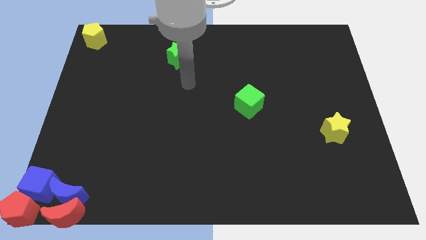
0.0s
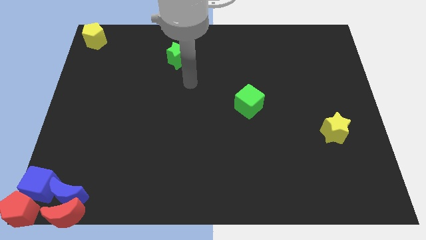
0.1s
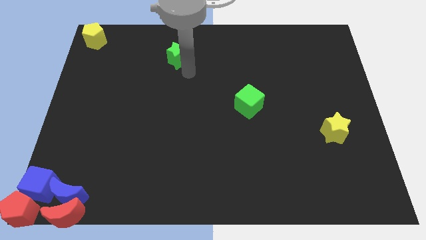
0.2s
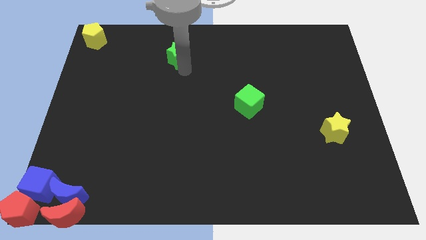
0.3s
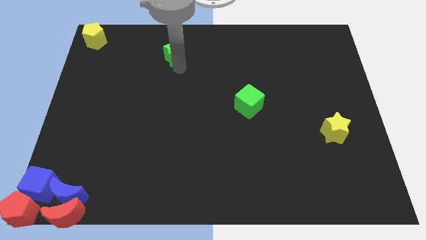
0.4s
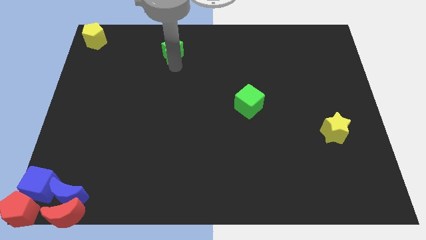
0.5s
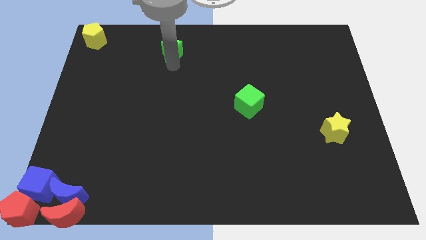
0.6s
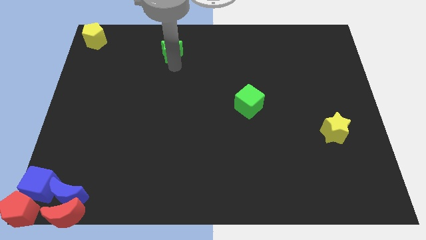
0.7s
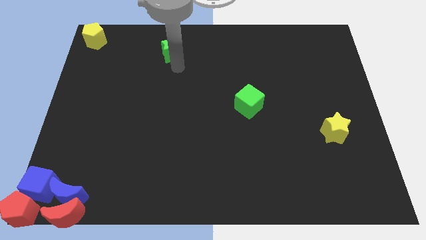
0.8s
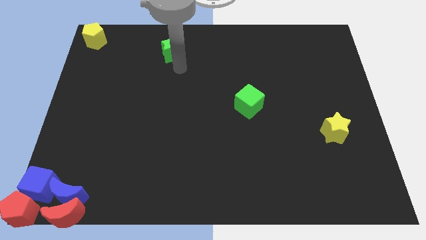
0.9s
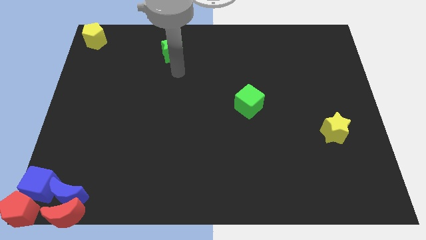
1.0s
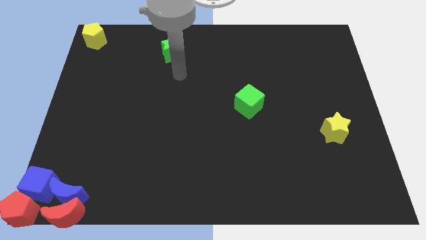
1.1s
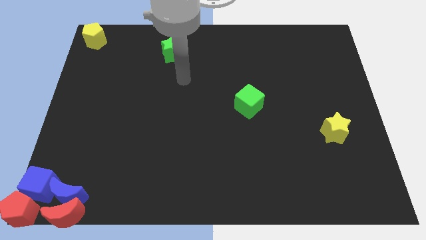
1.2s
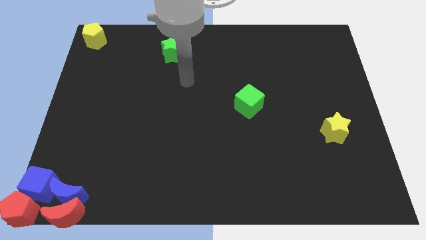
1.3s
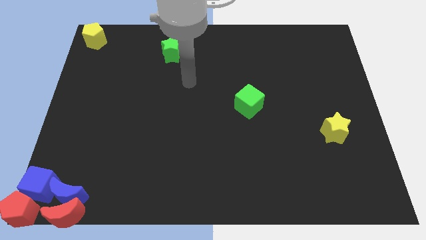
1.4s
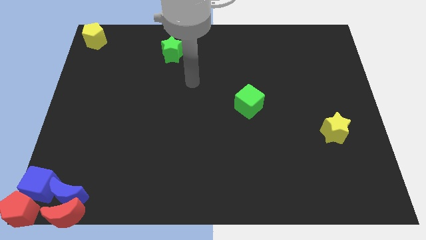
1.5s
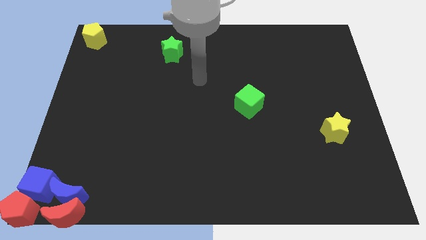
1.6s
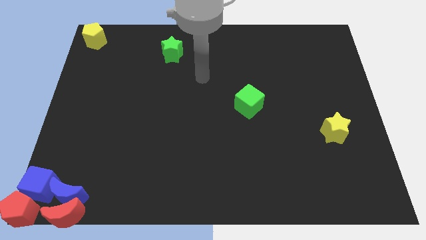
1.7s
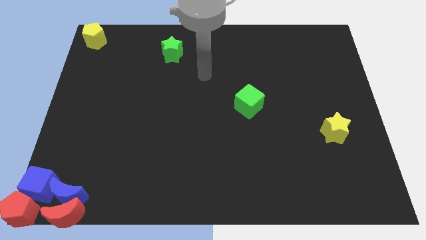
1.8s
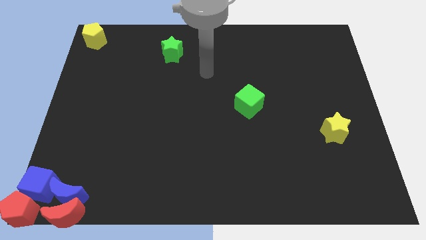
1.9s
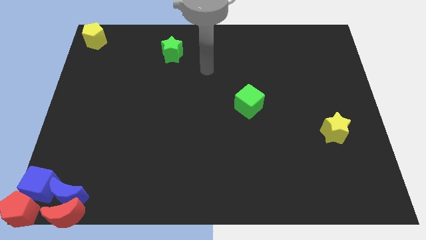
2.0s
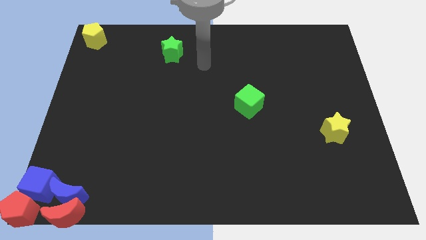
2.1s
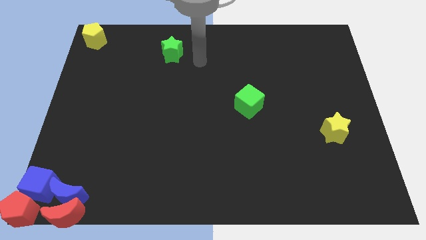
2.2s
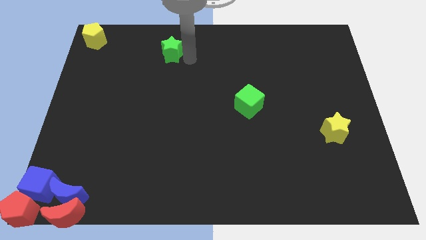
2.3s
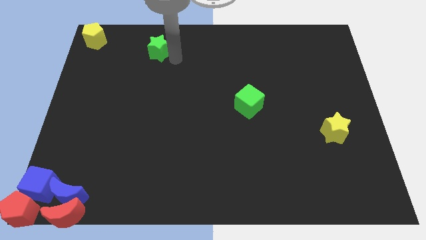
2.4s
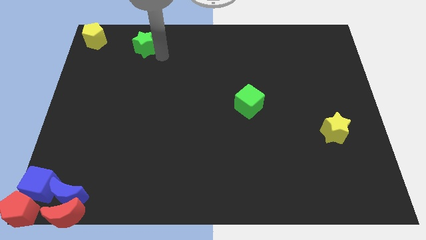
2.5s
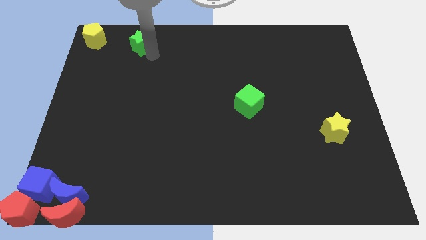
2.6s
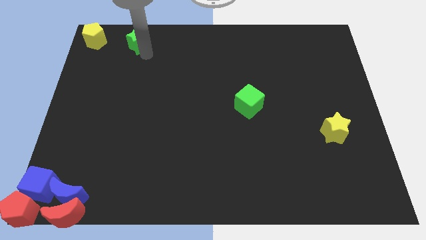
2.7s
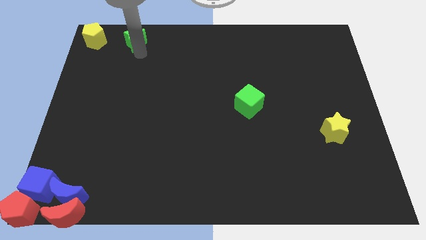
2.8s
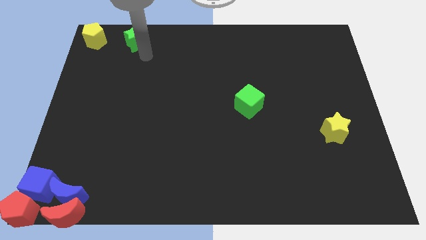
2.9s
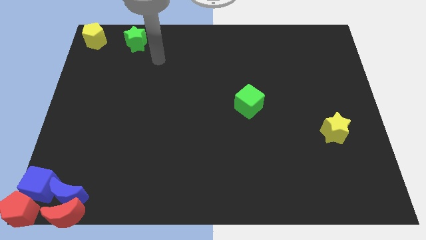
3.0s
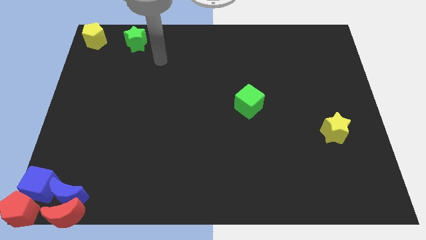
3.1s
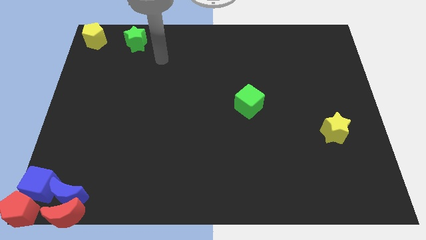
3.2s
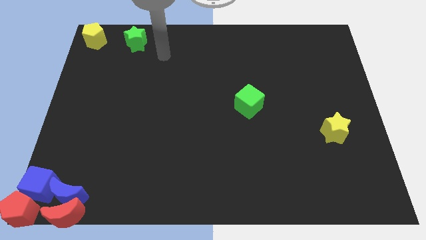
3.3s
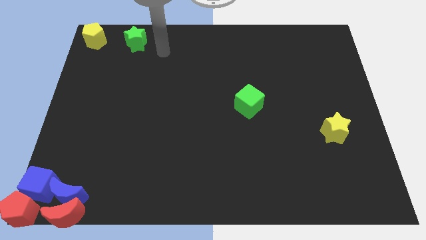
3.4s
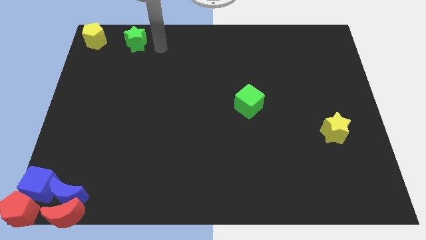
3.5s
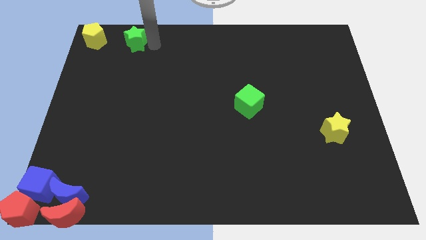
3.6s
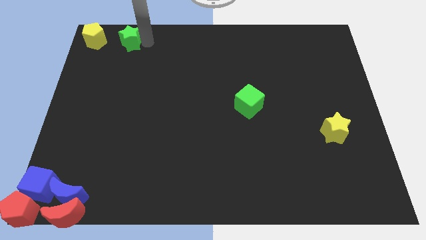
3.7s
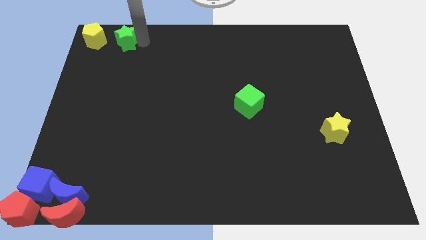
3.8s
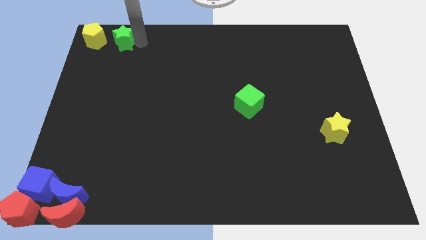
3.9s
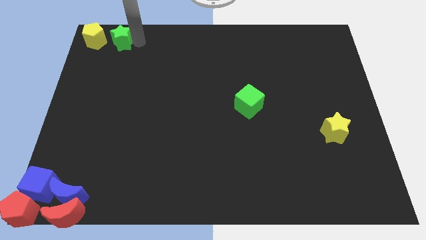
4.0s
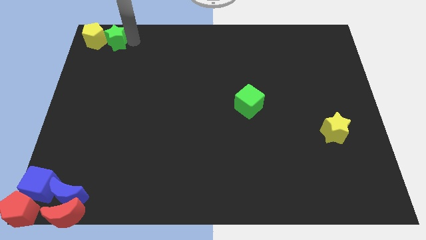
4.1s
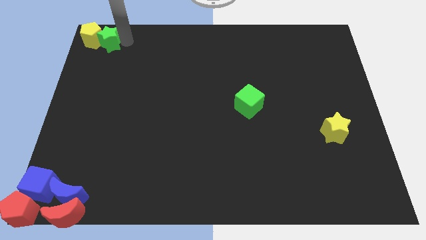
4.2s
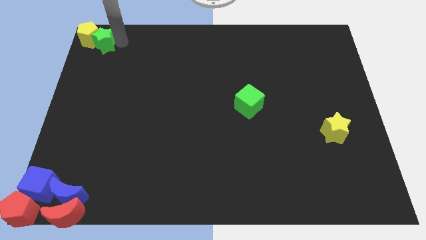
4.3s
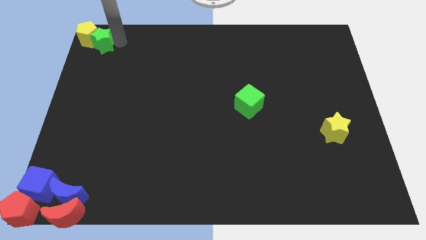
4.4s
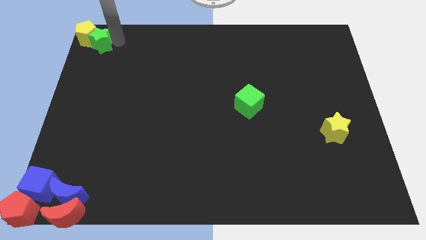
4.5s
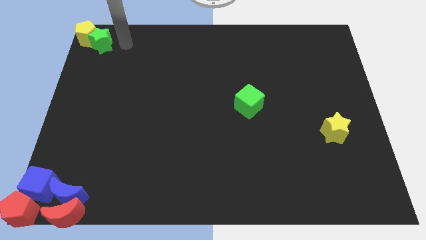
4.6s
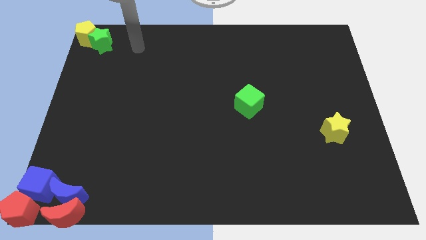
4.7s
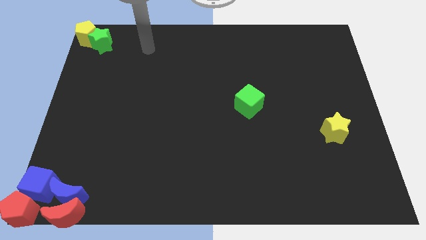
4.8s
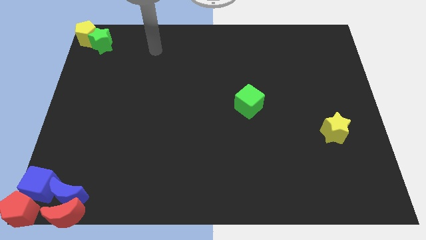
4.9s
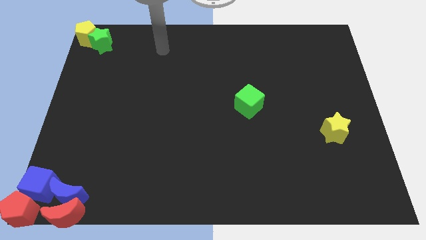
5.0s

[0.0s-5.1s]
push the green star into the yellow pentagon

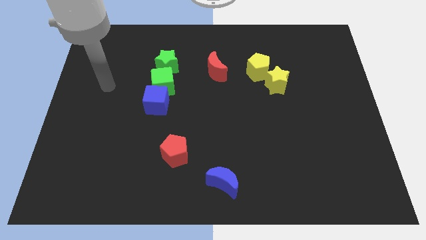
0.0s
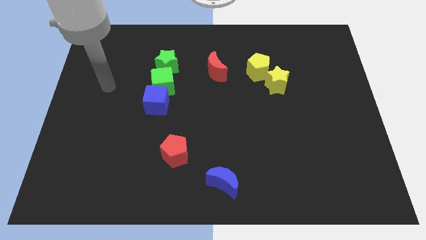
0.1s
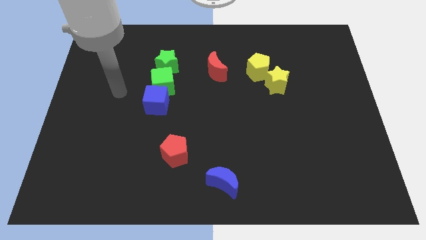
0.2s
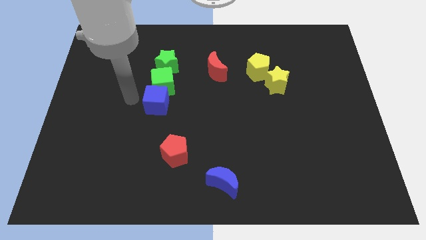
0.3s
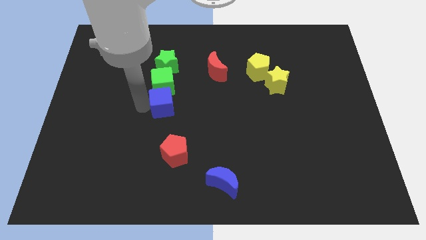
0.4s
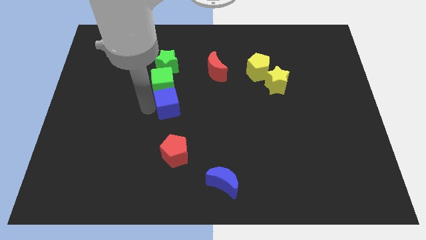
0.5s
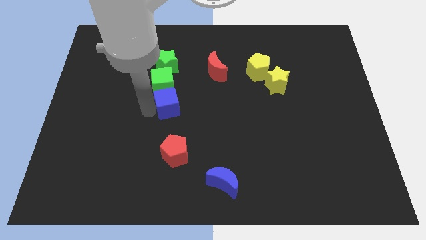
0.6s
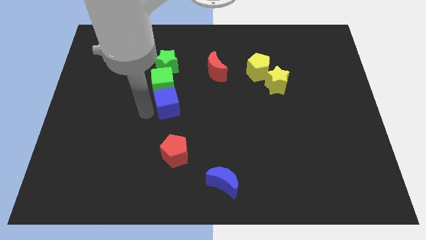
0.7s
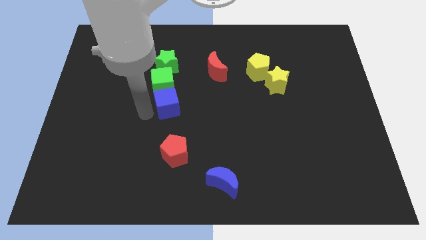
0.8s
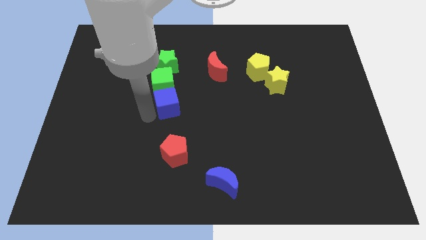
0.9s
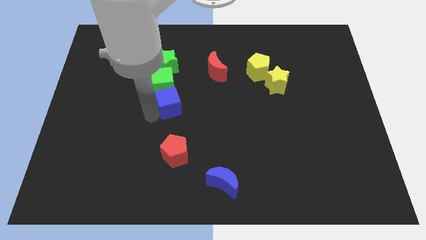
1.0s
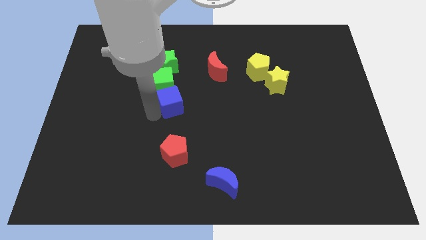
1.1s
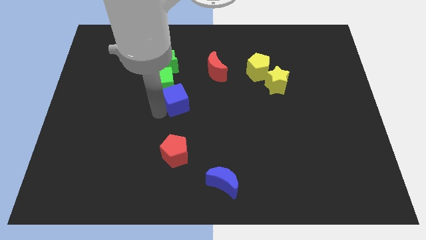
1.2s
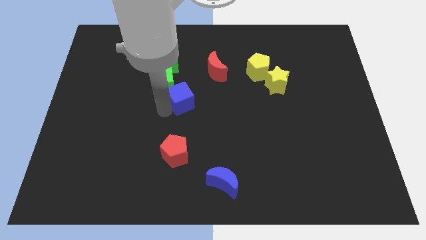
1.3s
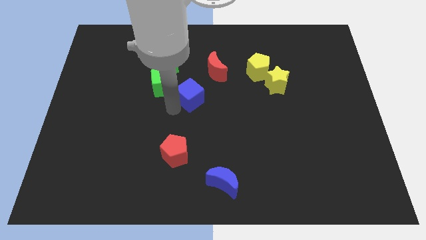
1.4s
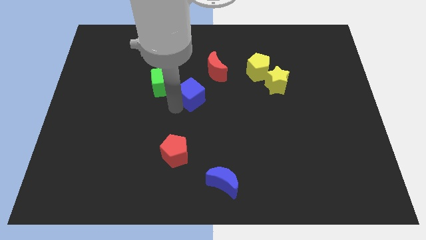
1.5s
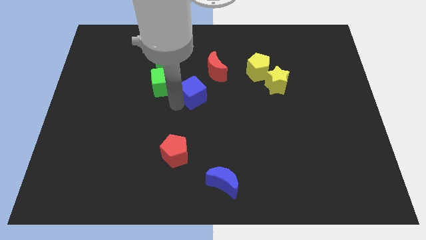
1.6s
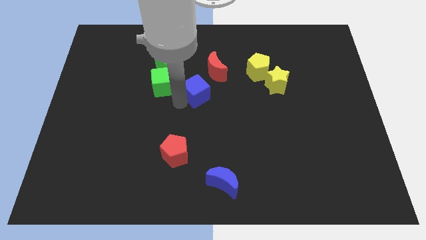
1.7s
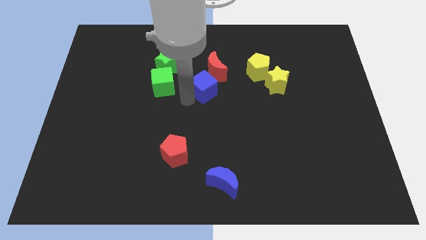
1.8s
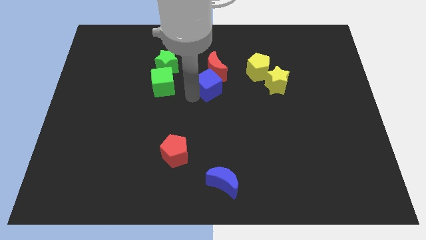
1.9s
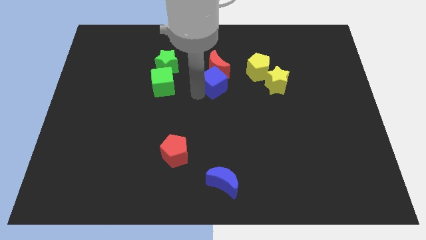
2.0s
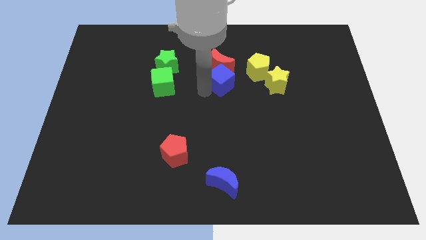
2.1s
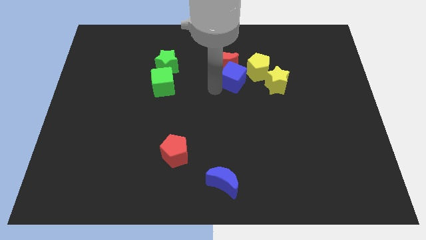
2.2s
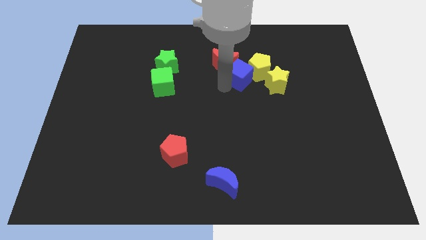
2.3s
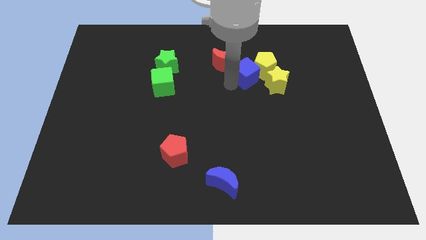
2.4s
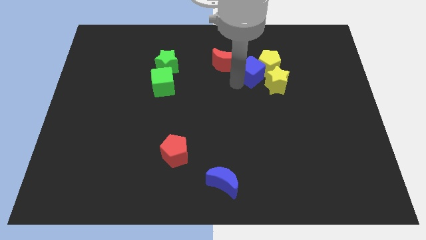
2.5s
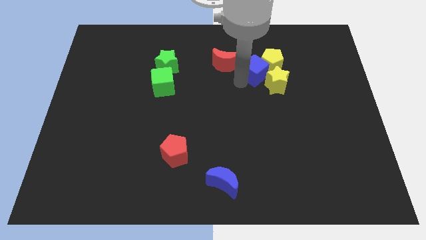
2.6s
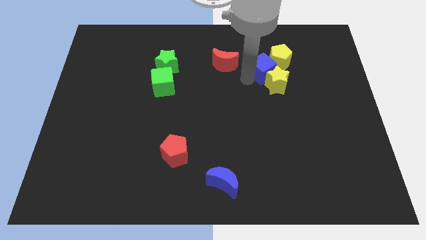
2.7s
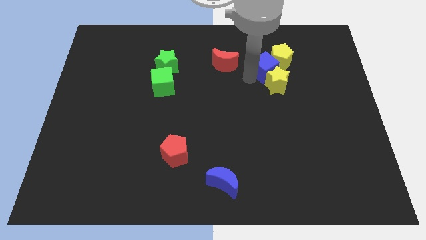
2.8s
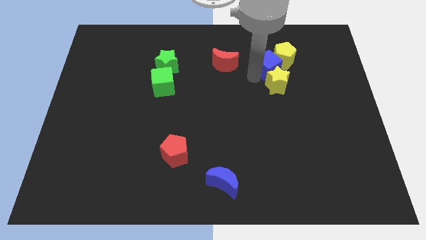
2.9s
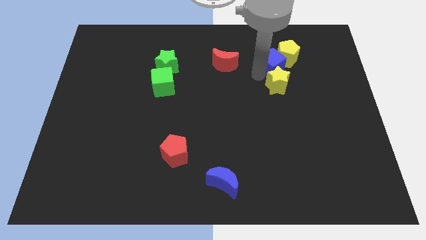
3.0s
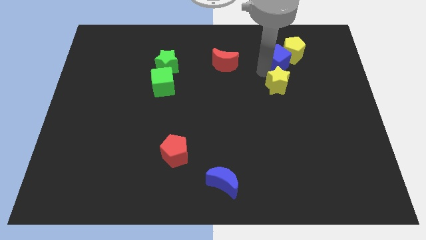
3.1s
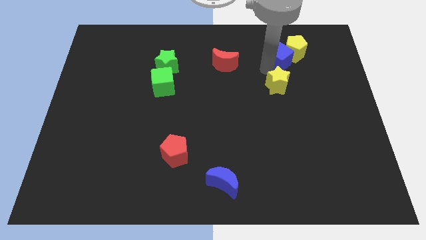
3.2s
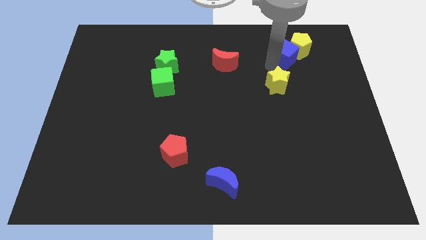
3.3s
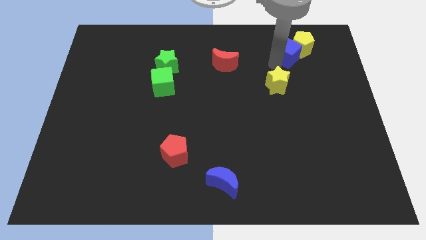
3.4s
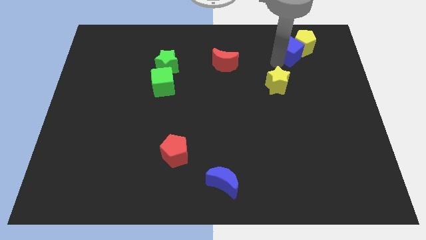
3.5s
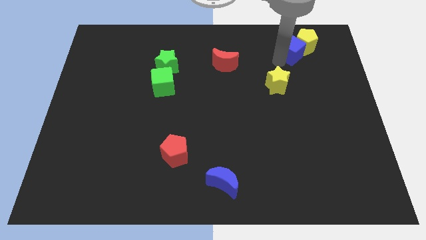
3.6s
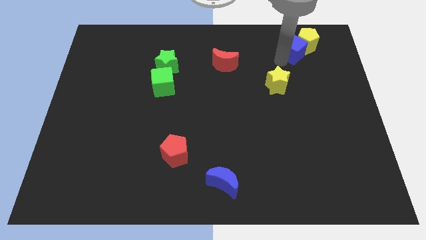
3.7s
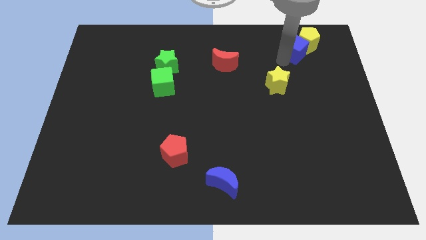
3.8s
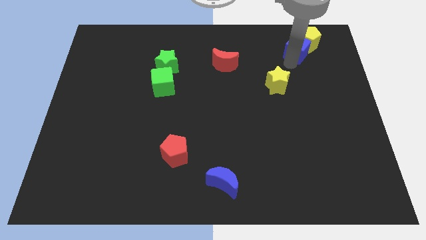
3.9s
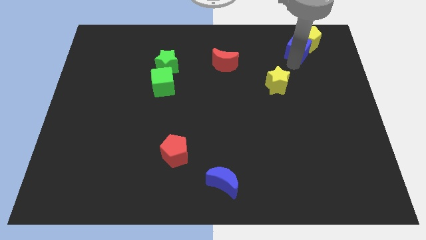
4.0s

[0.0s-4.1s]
push the blue cube into the yellow pentagon
